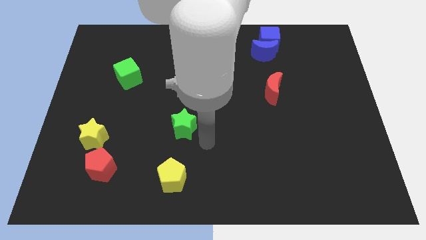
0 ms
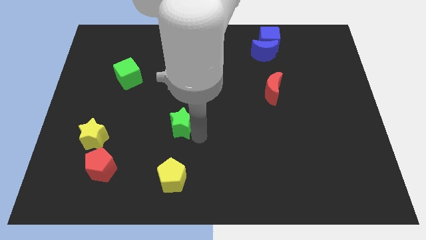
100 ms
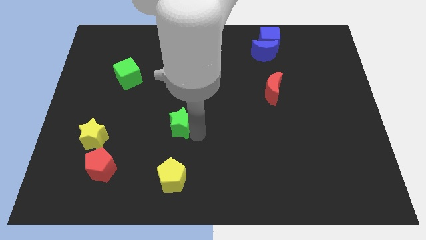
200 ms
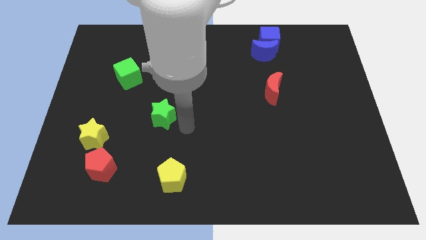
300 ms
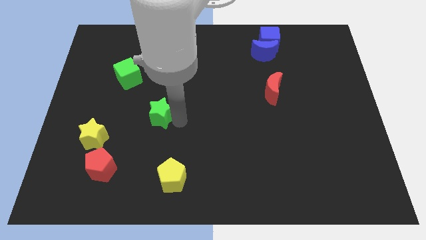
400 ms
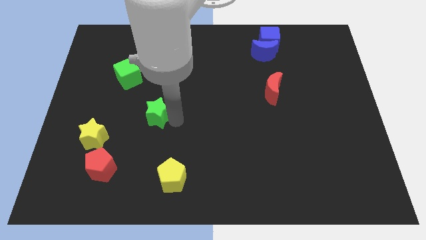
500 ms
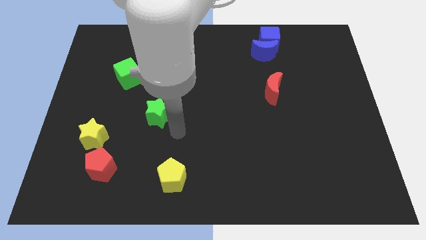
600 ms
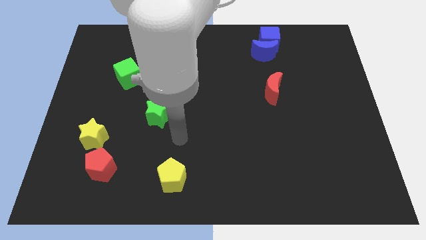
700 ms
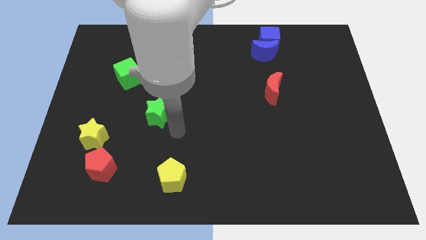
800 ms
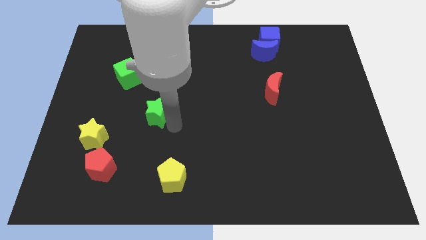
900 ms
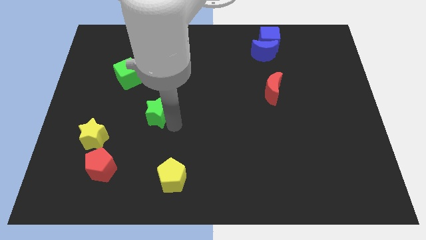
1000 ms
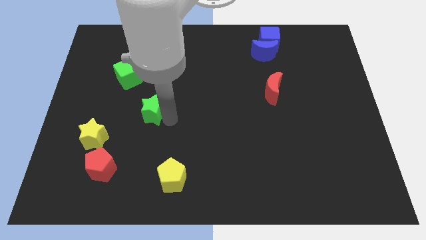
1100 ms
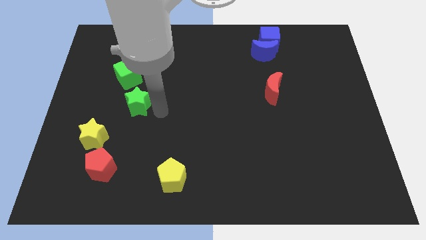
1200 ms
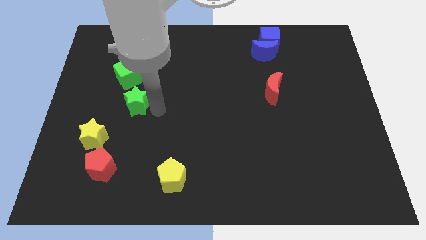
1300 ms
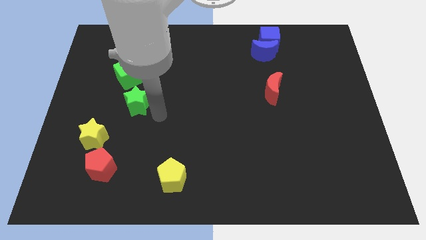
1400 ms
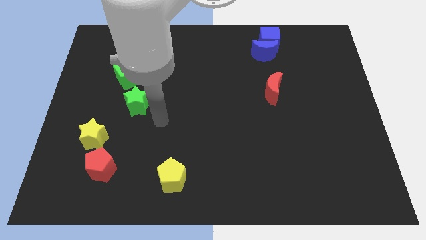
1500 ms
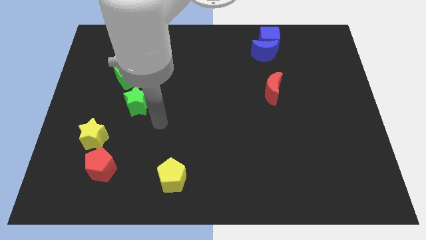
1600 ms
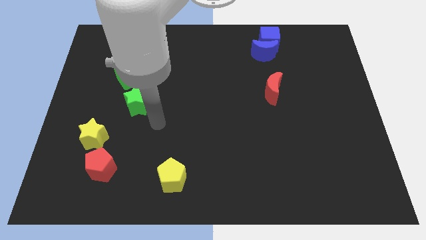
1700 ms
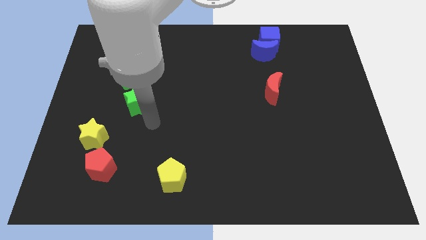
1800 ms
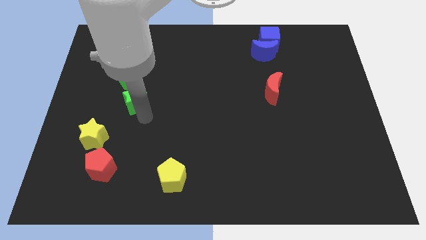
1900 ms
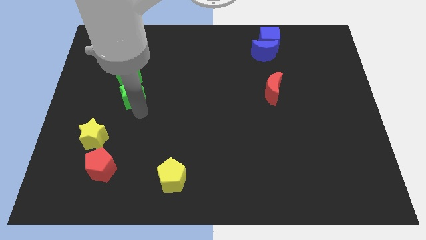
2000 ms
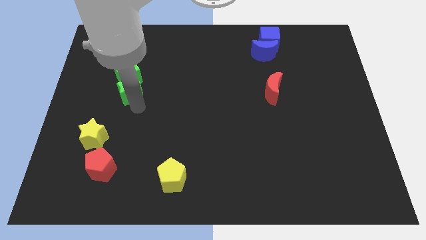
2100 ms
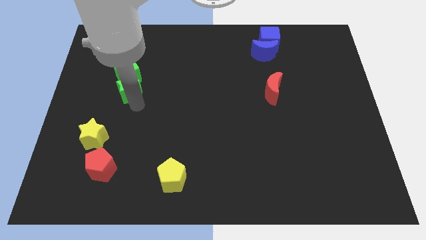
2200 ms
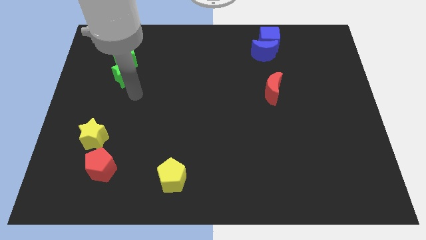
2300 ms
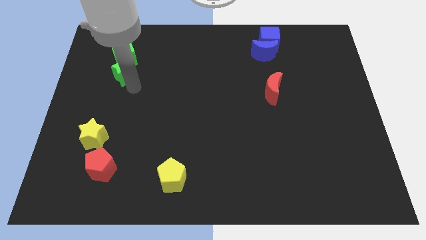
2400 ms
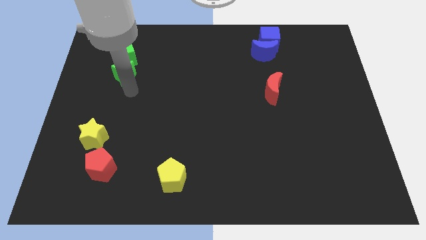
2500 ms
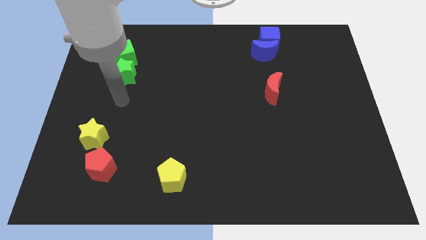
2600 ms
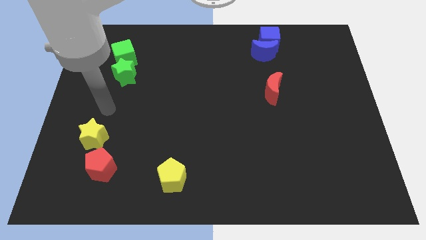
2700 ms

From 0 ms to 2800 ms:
push the green star into green cube

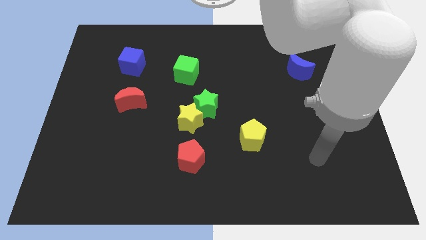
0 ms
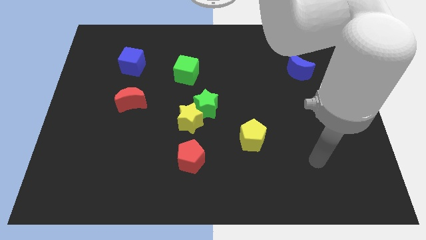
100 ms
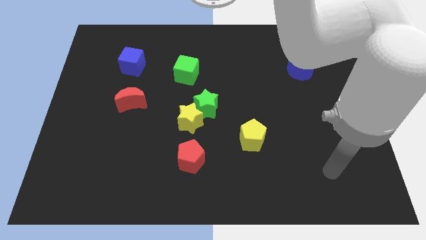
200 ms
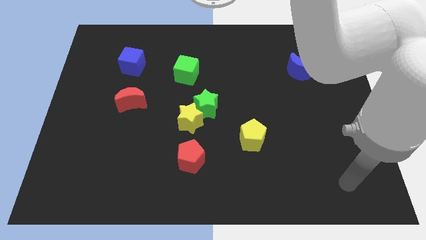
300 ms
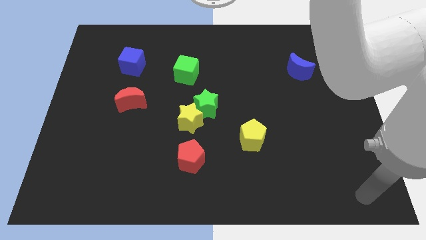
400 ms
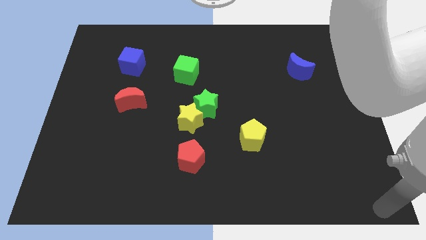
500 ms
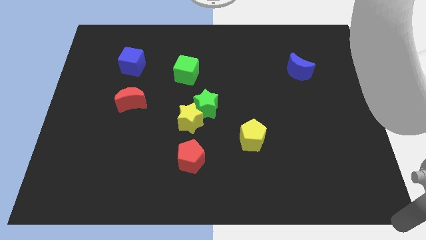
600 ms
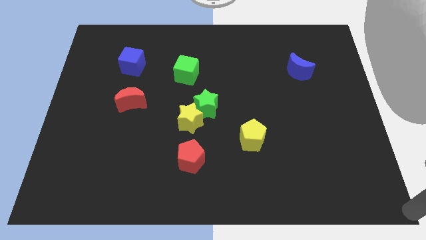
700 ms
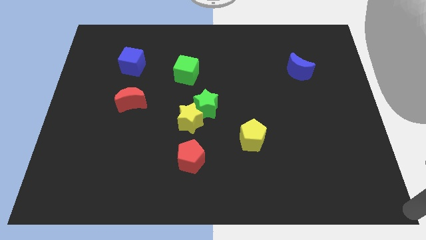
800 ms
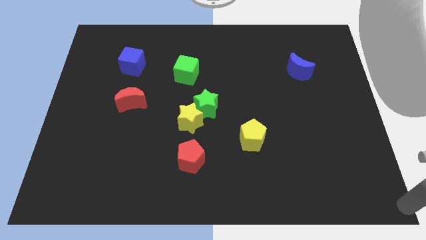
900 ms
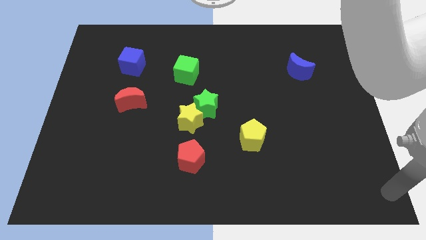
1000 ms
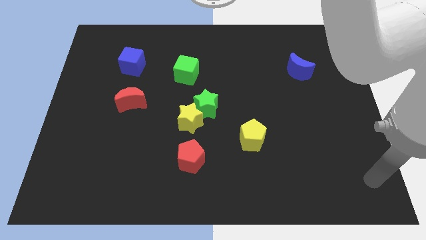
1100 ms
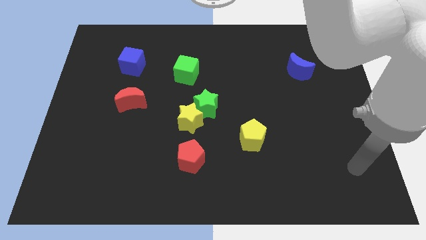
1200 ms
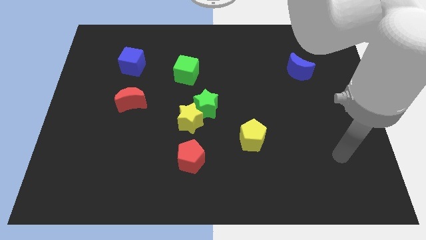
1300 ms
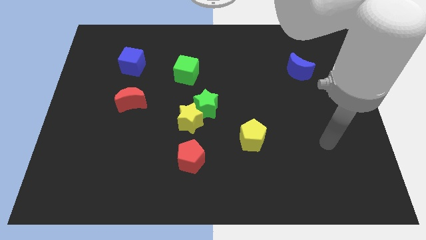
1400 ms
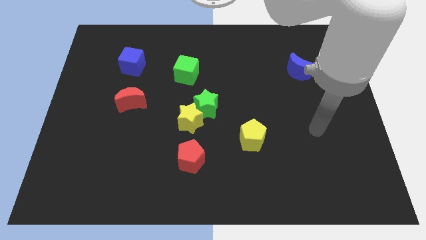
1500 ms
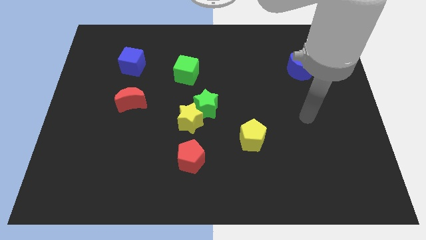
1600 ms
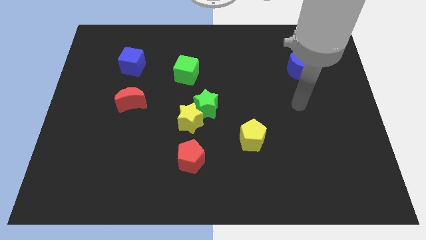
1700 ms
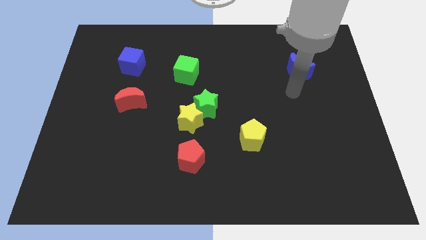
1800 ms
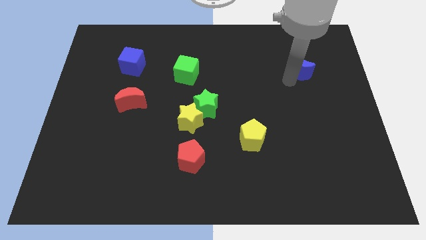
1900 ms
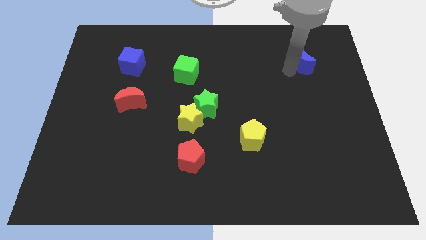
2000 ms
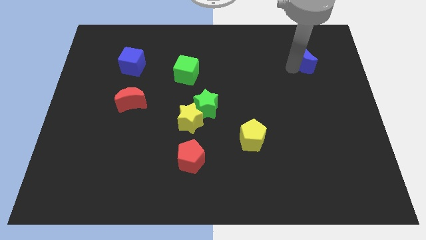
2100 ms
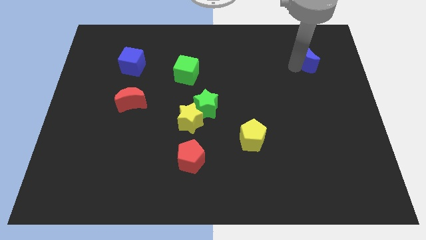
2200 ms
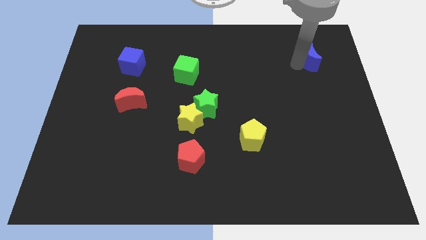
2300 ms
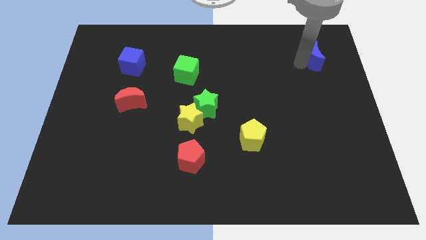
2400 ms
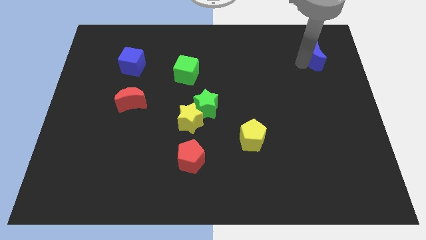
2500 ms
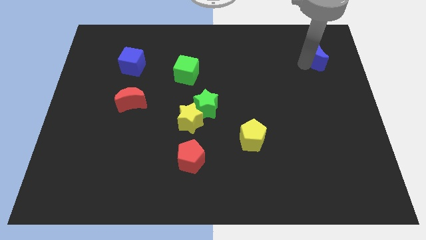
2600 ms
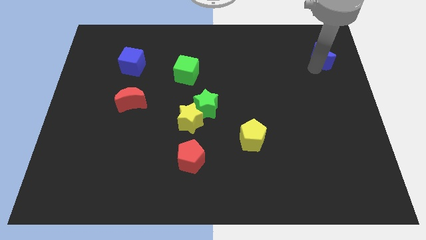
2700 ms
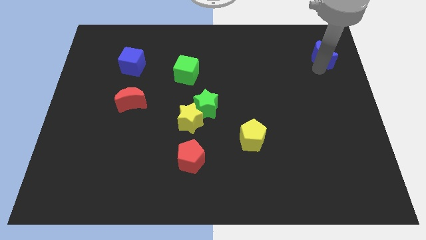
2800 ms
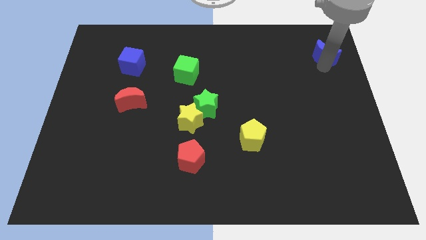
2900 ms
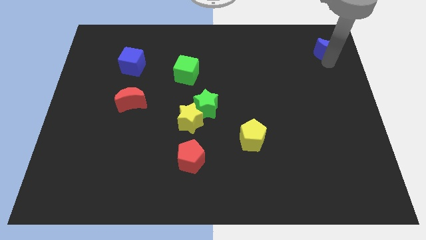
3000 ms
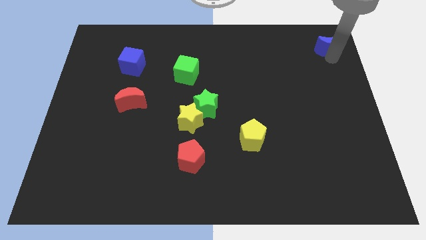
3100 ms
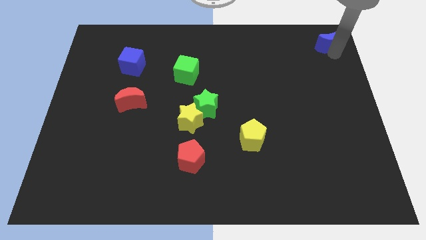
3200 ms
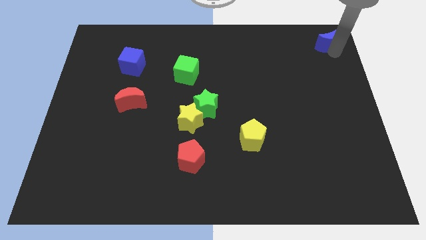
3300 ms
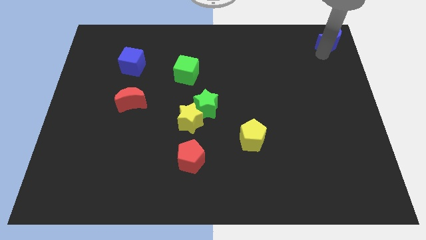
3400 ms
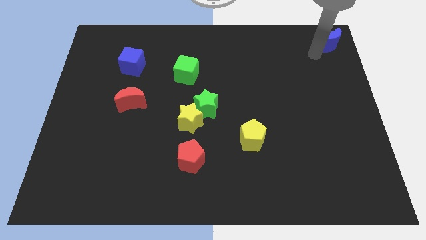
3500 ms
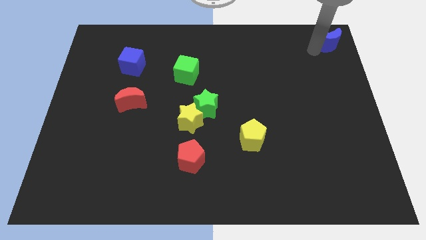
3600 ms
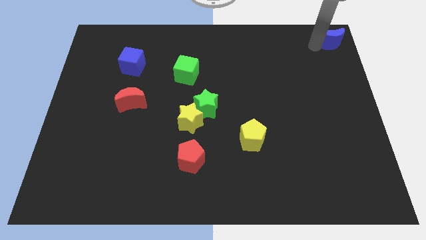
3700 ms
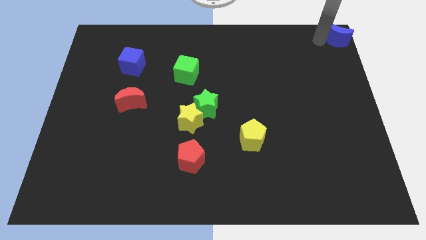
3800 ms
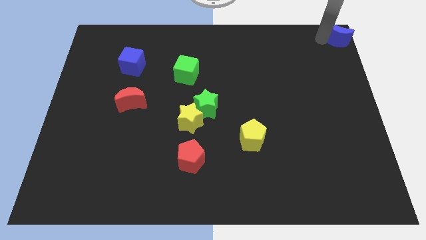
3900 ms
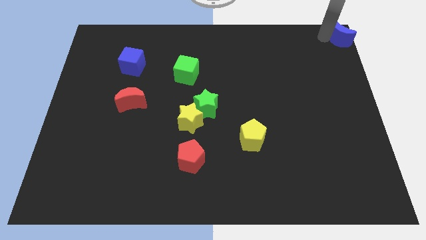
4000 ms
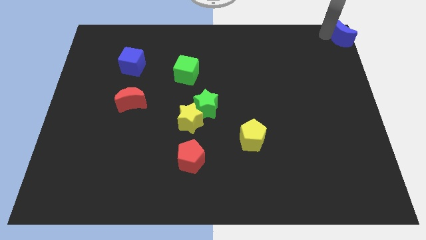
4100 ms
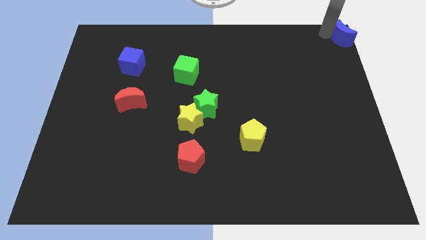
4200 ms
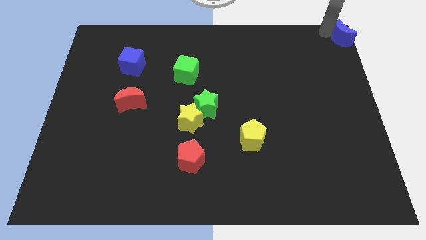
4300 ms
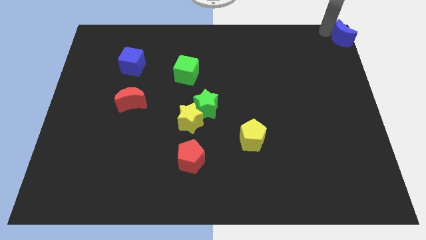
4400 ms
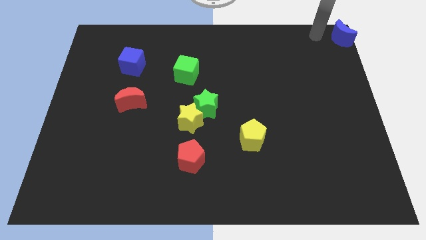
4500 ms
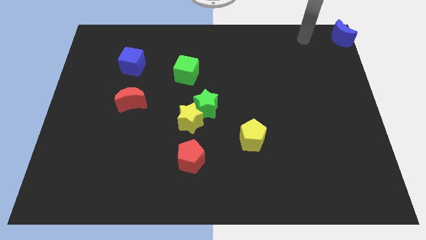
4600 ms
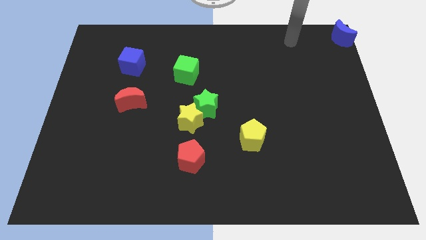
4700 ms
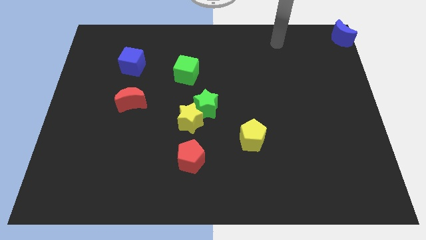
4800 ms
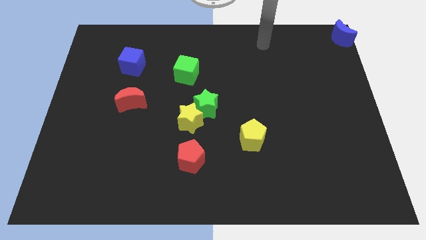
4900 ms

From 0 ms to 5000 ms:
place the blue moon at the top right corner of the board

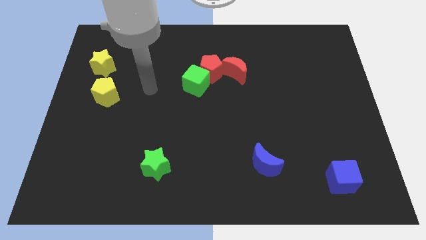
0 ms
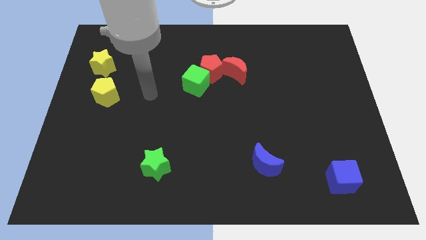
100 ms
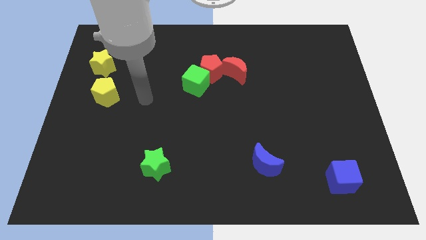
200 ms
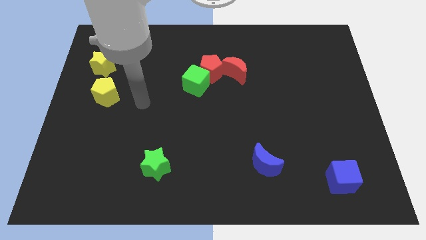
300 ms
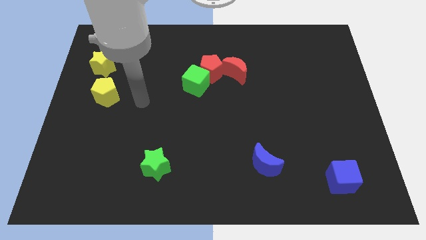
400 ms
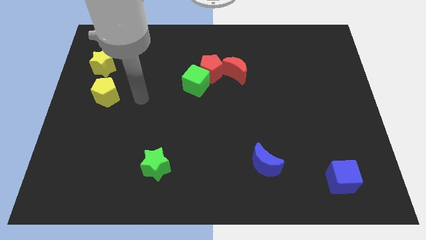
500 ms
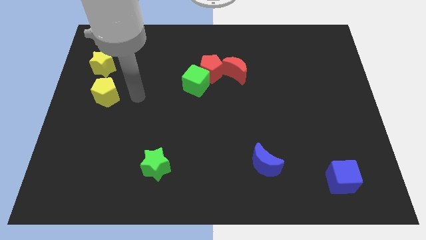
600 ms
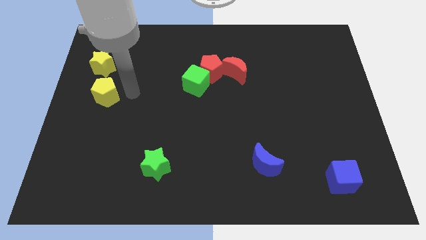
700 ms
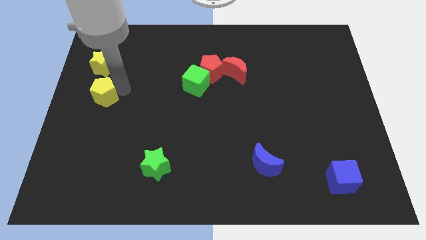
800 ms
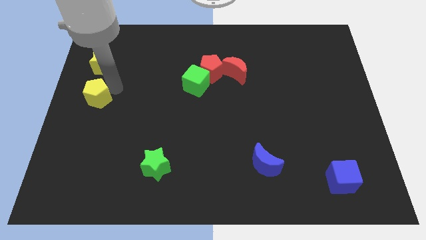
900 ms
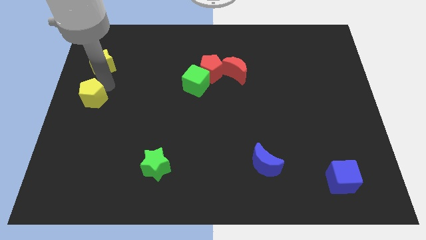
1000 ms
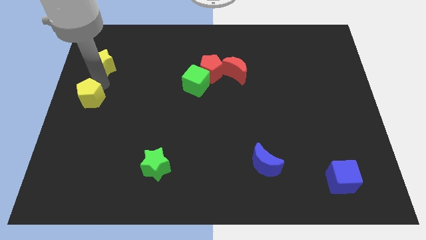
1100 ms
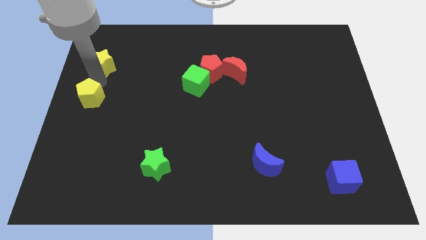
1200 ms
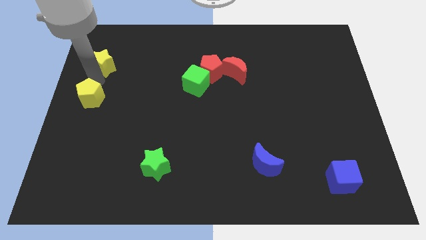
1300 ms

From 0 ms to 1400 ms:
put the yellow pentagon vertically below the yellow star
